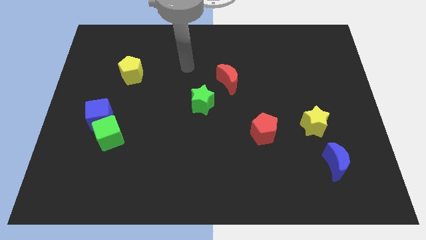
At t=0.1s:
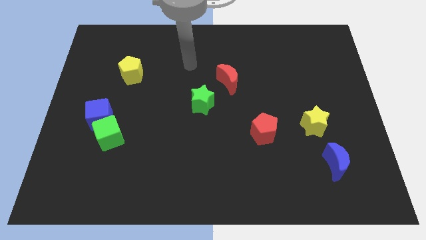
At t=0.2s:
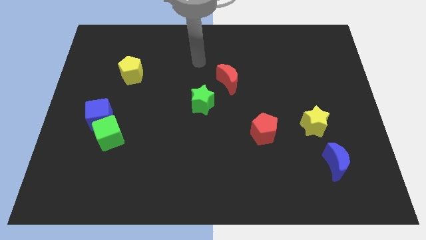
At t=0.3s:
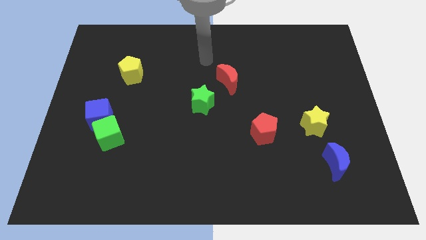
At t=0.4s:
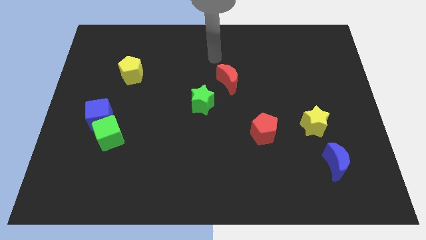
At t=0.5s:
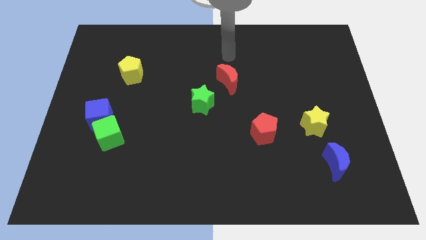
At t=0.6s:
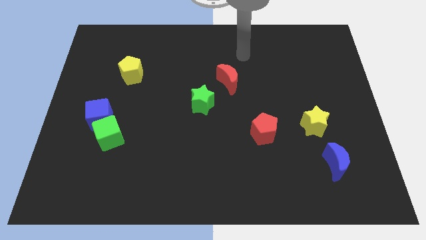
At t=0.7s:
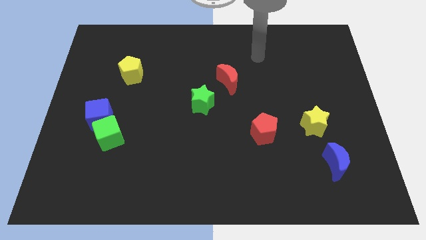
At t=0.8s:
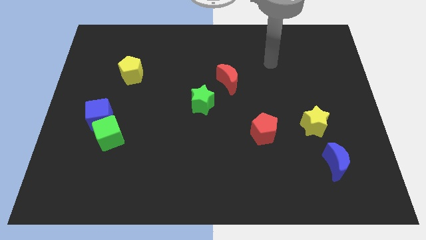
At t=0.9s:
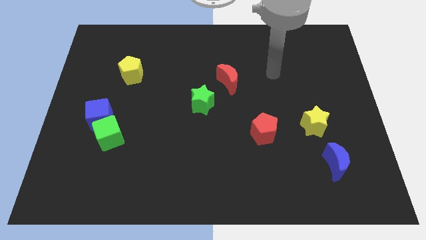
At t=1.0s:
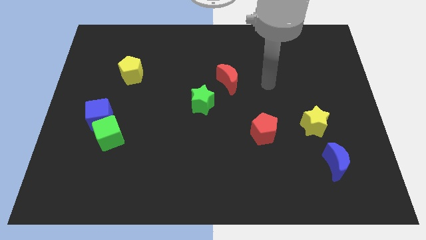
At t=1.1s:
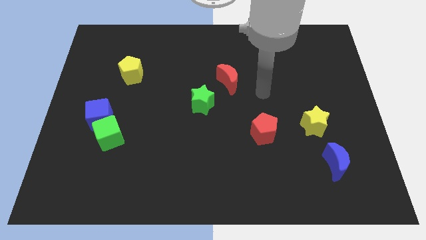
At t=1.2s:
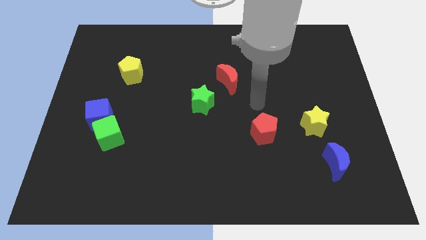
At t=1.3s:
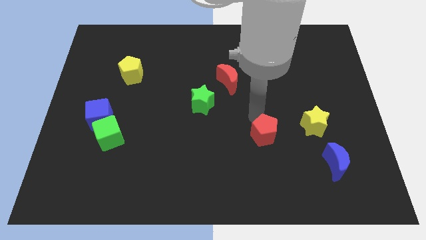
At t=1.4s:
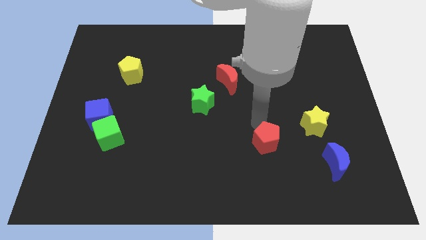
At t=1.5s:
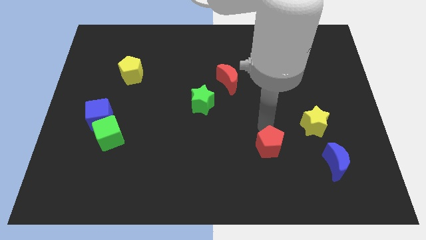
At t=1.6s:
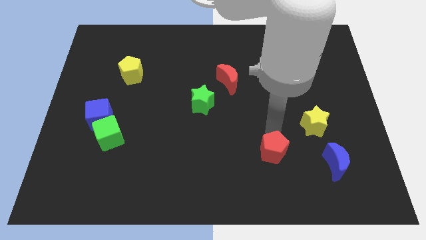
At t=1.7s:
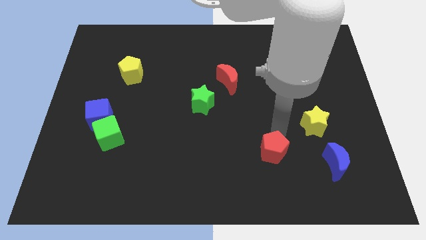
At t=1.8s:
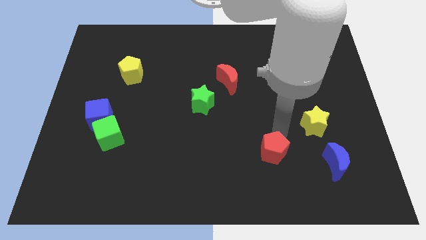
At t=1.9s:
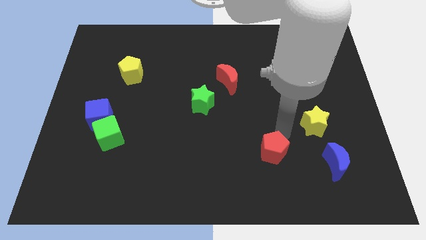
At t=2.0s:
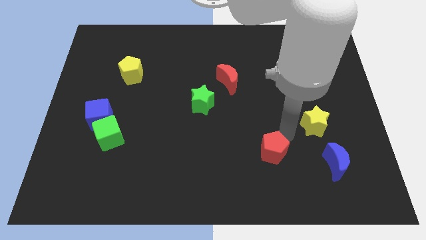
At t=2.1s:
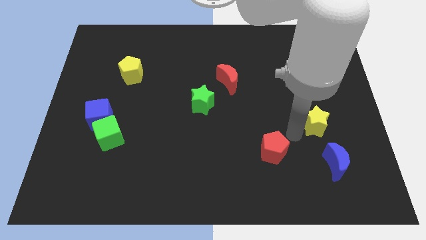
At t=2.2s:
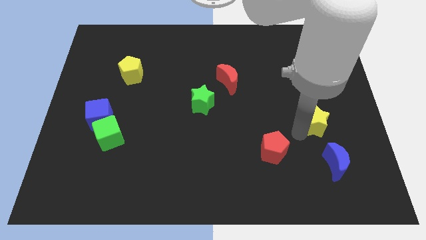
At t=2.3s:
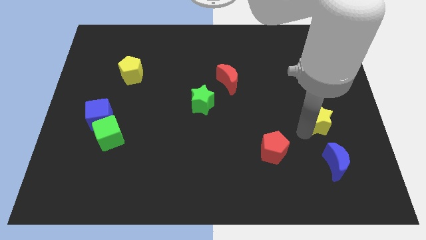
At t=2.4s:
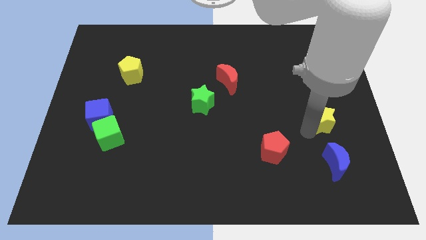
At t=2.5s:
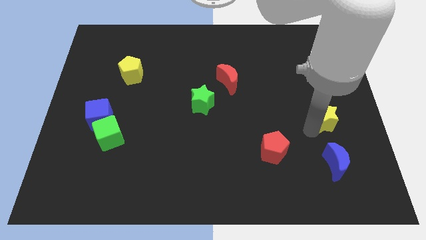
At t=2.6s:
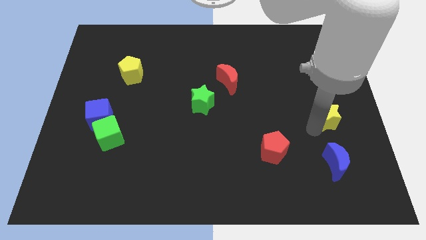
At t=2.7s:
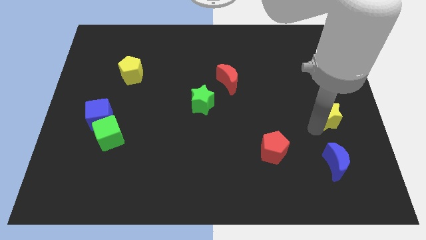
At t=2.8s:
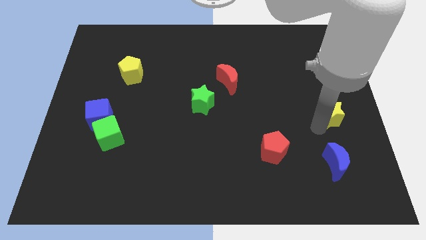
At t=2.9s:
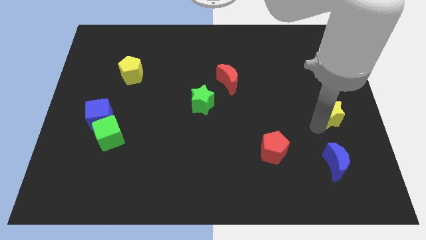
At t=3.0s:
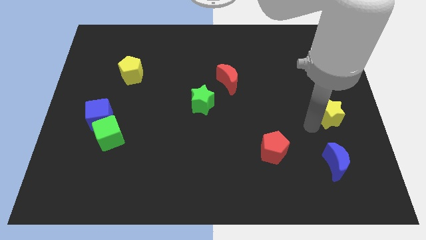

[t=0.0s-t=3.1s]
move the yellow star to the center right

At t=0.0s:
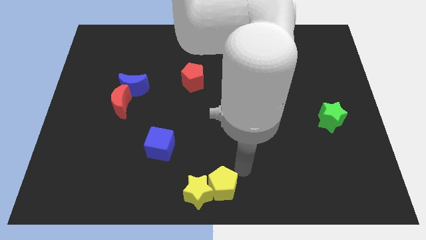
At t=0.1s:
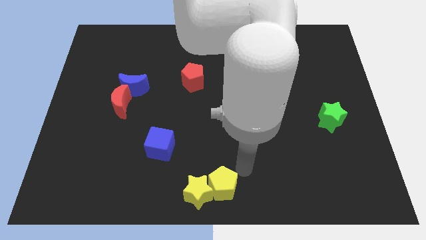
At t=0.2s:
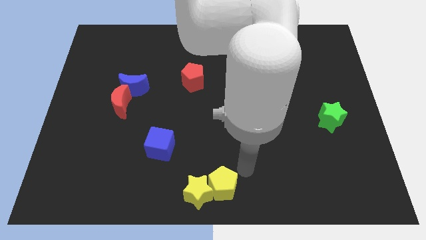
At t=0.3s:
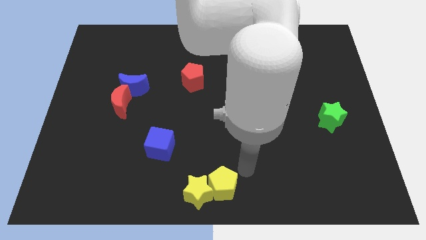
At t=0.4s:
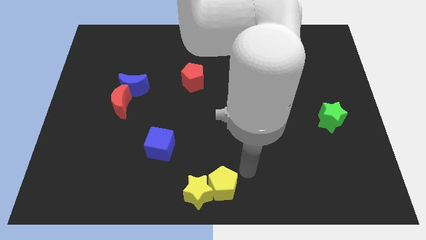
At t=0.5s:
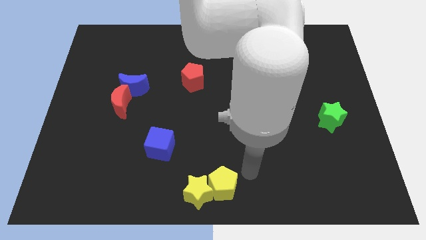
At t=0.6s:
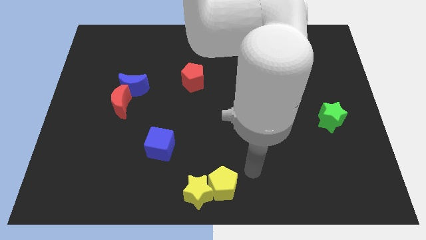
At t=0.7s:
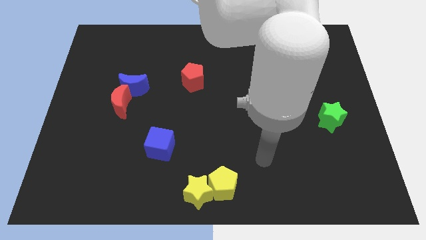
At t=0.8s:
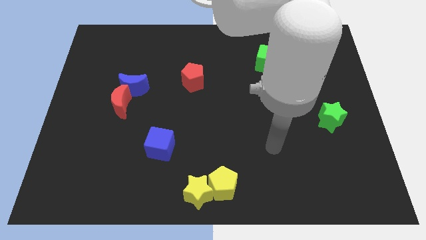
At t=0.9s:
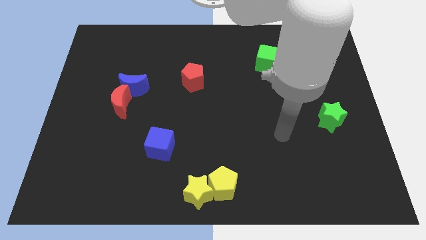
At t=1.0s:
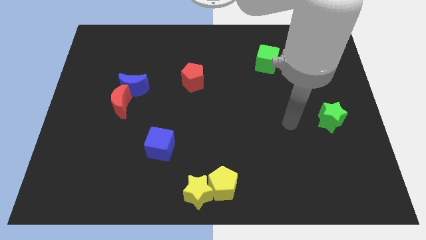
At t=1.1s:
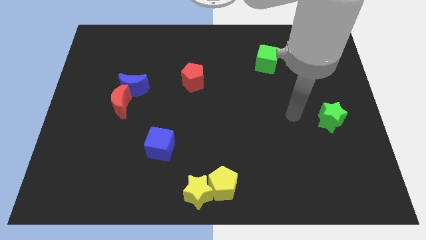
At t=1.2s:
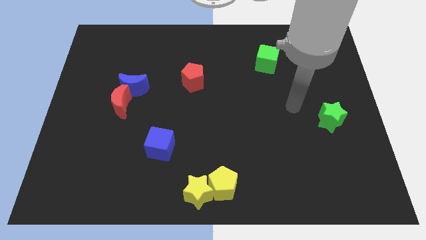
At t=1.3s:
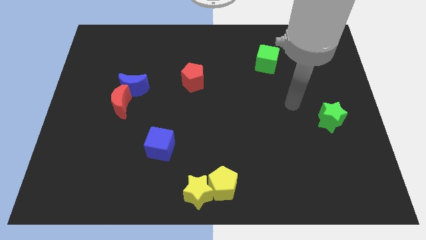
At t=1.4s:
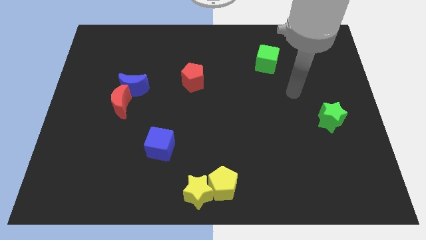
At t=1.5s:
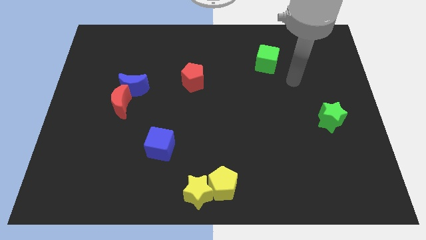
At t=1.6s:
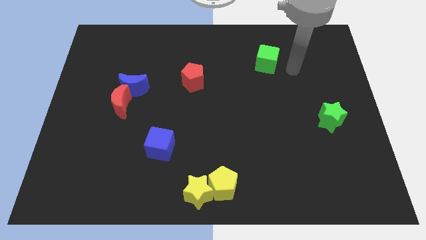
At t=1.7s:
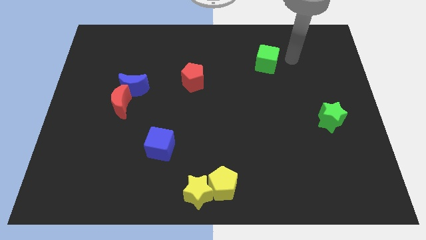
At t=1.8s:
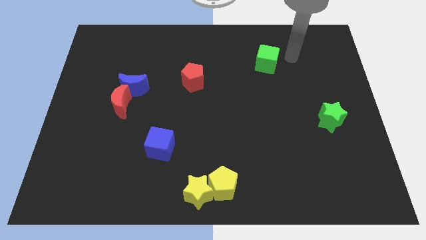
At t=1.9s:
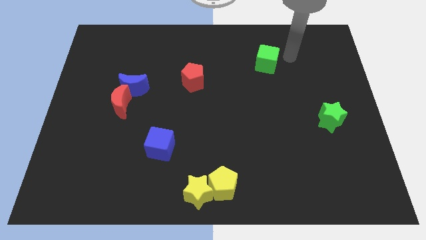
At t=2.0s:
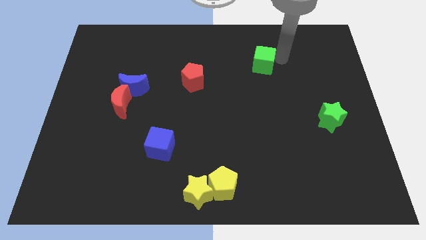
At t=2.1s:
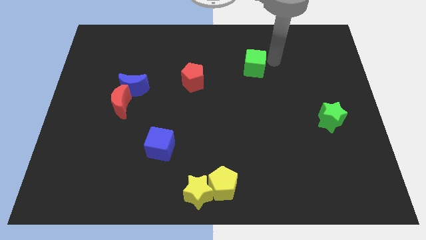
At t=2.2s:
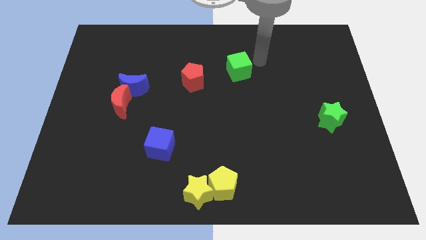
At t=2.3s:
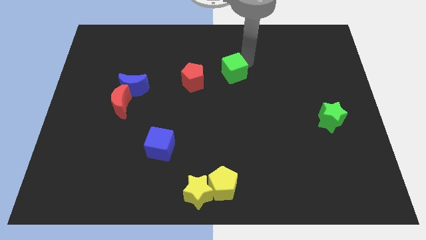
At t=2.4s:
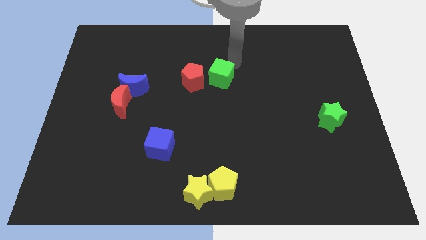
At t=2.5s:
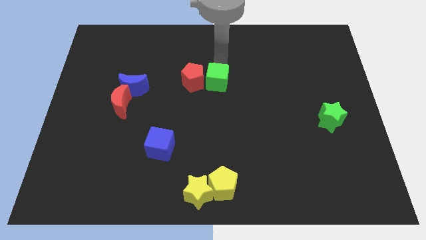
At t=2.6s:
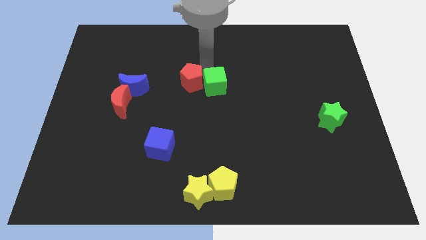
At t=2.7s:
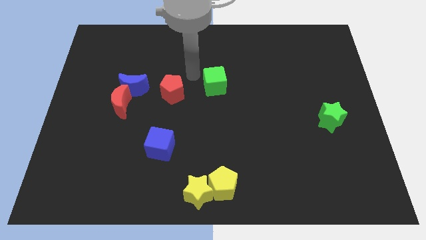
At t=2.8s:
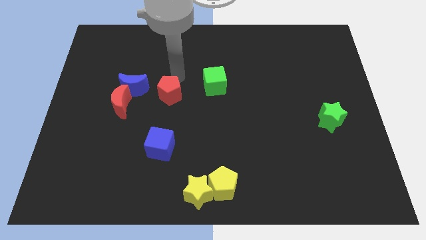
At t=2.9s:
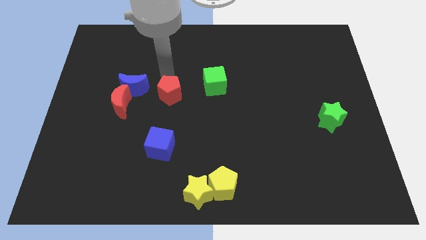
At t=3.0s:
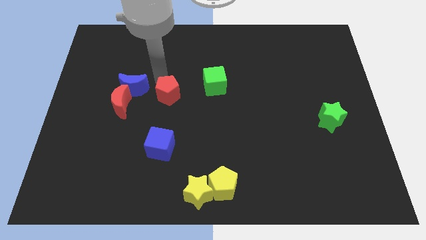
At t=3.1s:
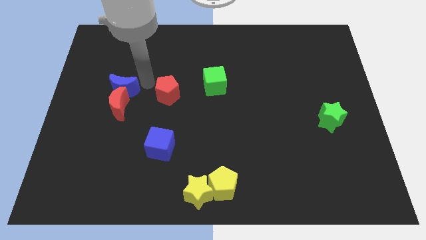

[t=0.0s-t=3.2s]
place red pentagon above blue cube

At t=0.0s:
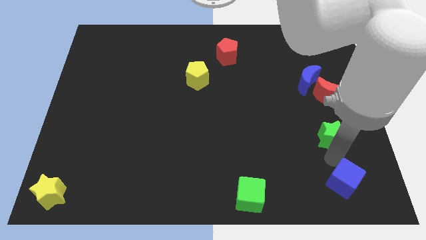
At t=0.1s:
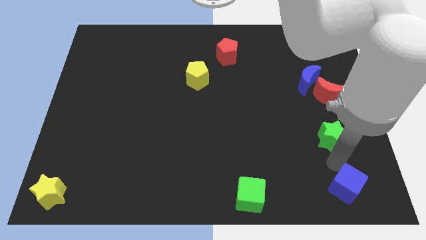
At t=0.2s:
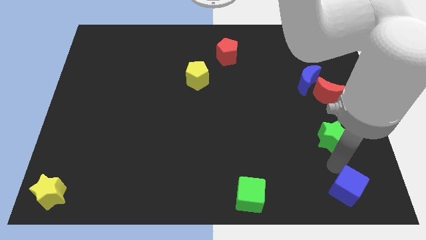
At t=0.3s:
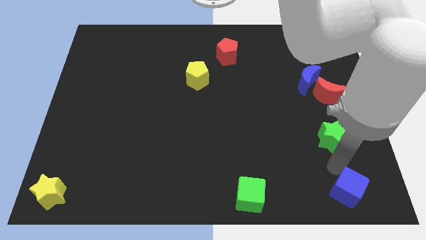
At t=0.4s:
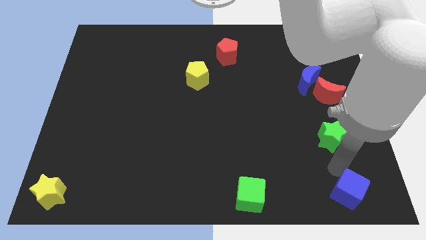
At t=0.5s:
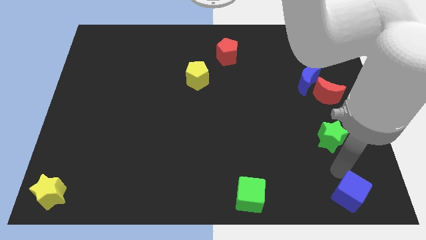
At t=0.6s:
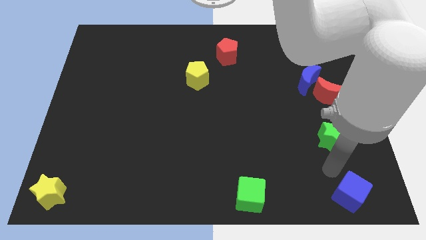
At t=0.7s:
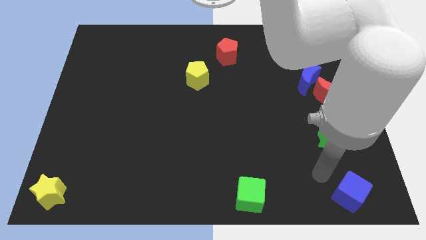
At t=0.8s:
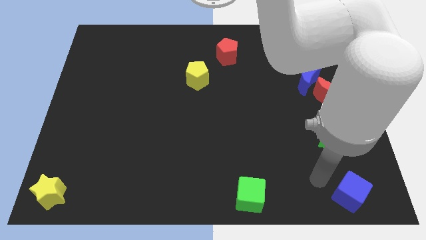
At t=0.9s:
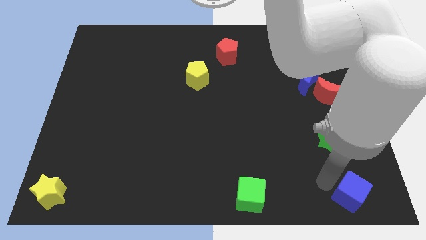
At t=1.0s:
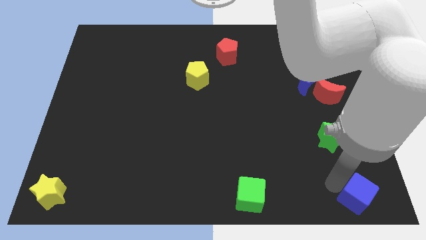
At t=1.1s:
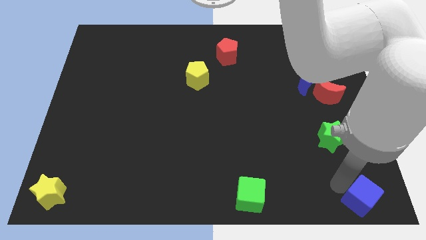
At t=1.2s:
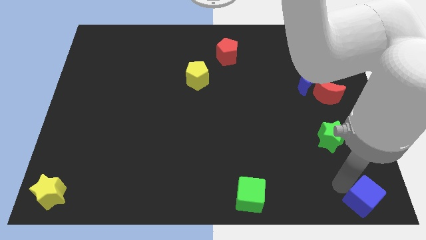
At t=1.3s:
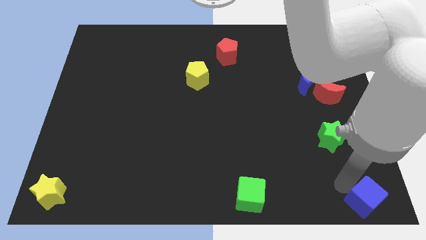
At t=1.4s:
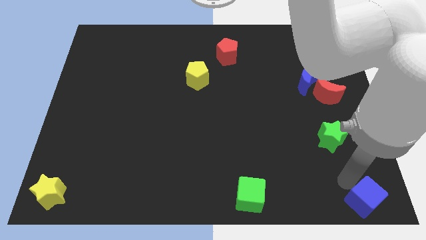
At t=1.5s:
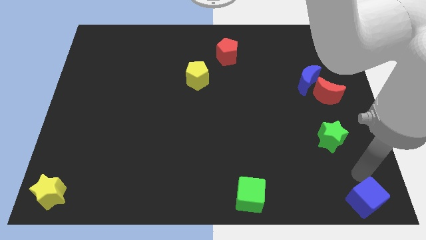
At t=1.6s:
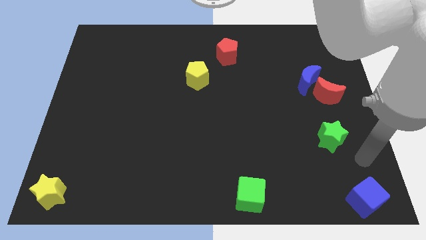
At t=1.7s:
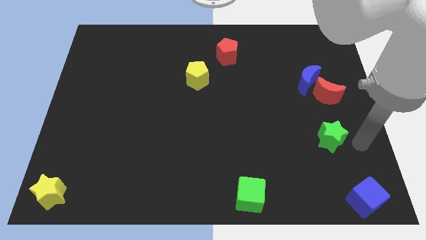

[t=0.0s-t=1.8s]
move the blue cube down slightly

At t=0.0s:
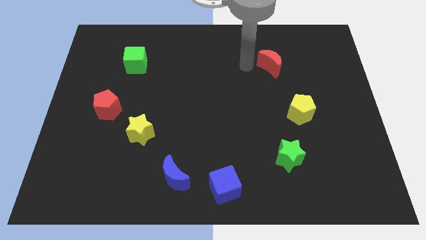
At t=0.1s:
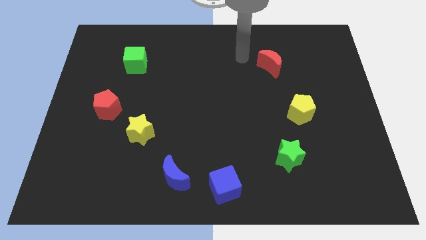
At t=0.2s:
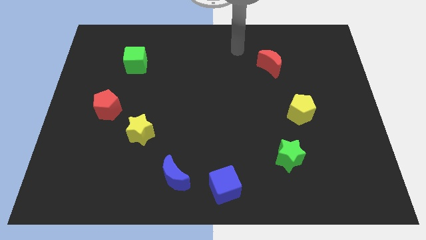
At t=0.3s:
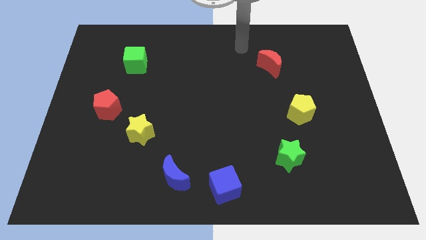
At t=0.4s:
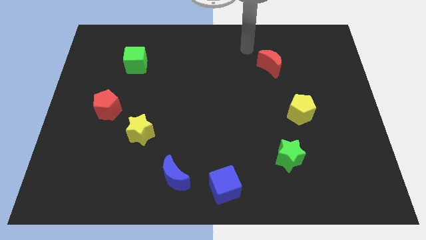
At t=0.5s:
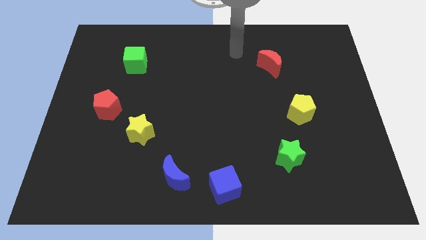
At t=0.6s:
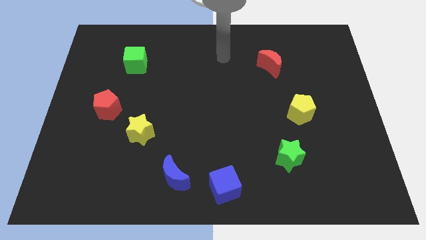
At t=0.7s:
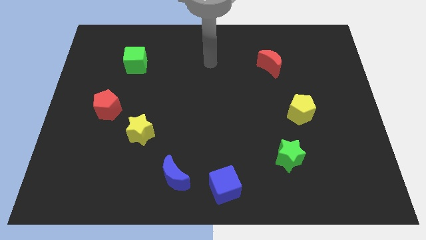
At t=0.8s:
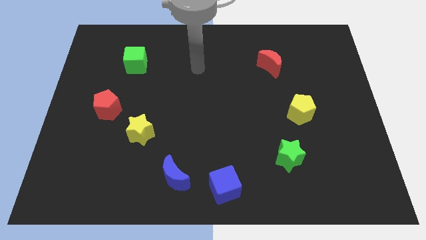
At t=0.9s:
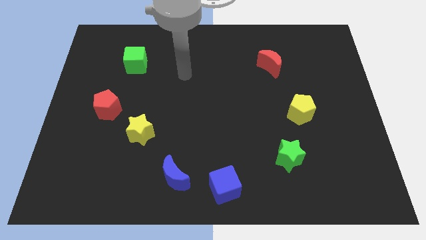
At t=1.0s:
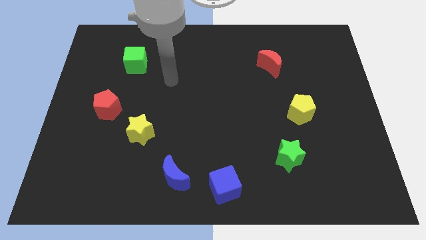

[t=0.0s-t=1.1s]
move your arm away from the red crescent on the board
